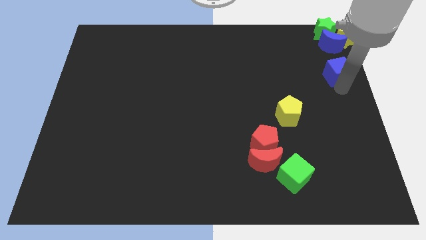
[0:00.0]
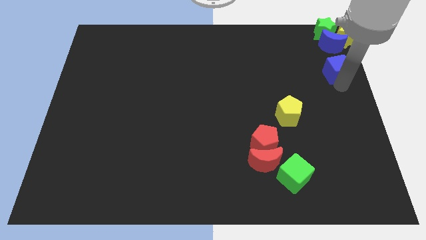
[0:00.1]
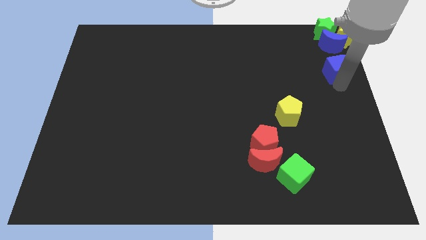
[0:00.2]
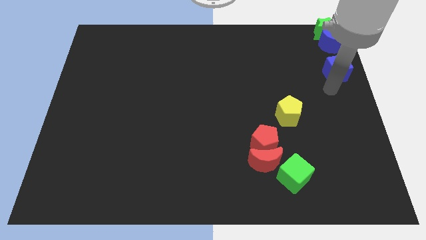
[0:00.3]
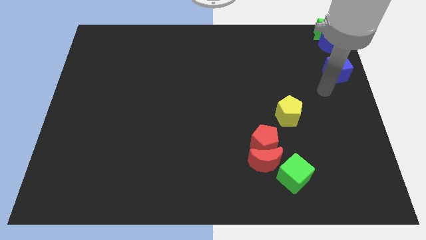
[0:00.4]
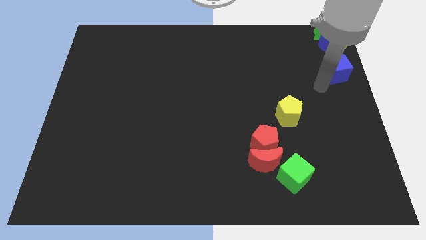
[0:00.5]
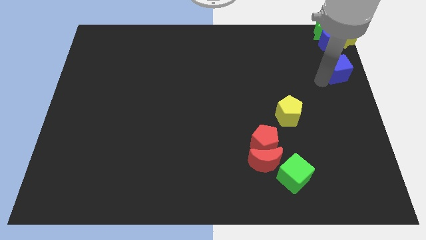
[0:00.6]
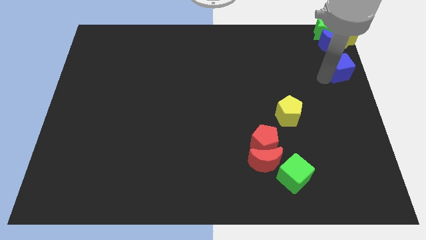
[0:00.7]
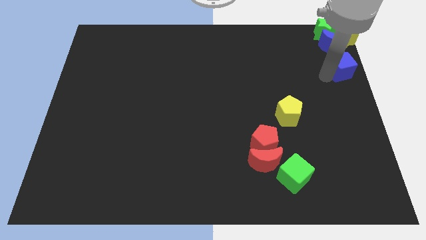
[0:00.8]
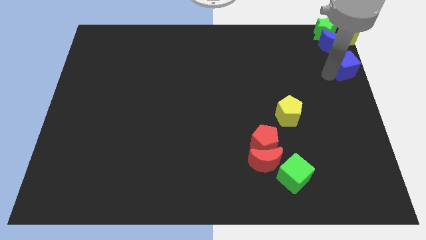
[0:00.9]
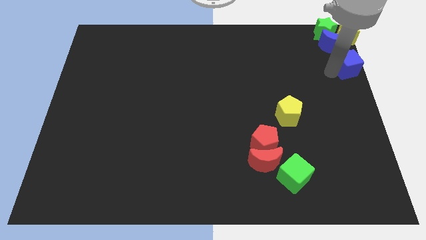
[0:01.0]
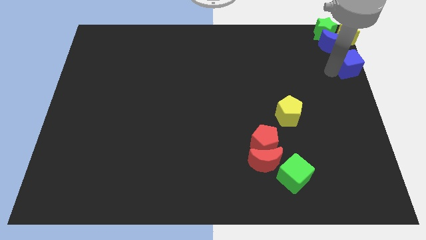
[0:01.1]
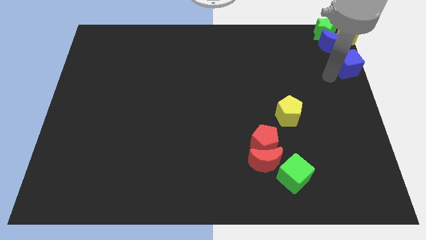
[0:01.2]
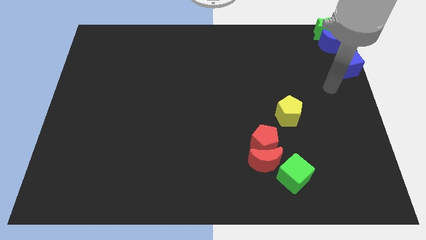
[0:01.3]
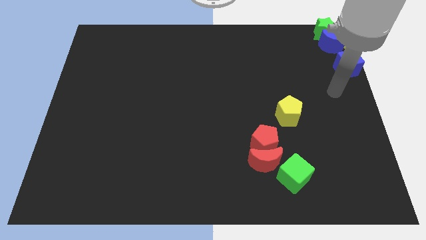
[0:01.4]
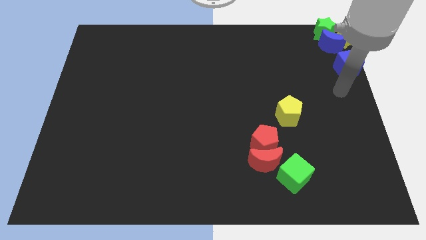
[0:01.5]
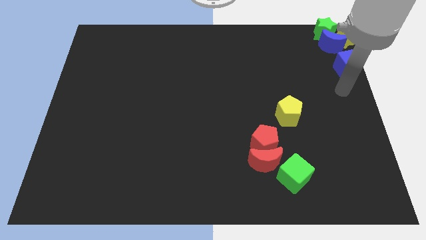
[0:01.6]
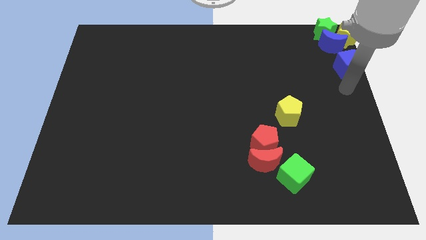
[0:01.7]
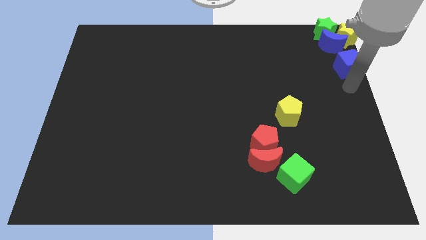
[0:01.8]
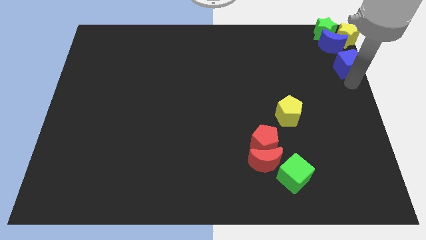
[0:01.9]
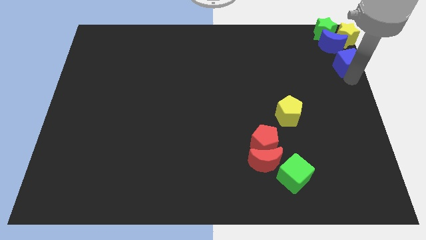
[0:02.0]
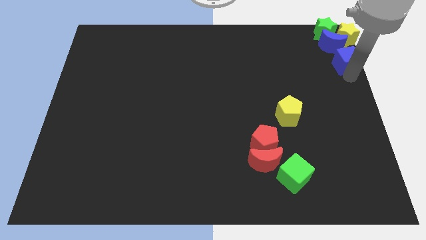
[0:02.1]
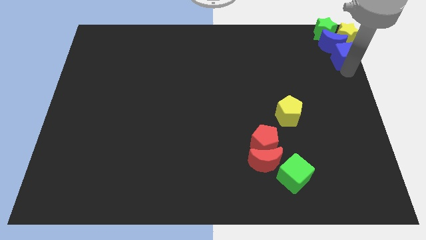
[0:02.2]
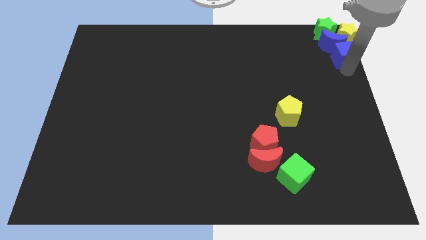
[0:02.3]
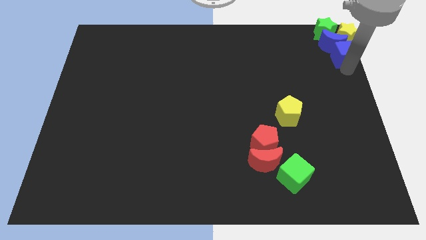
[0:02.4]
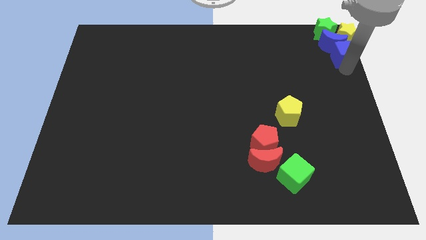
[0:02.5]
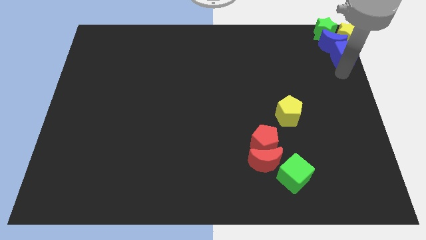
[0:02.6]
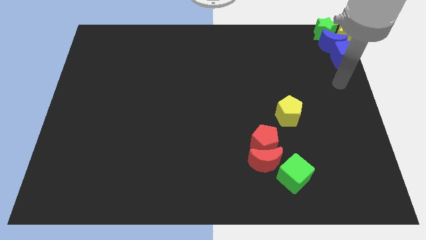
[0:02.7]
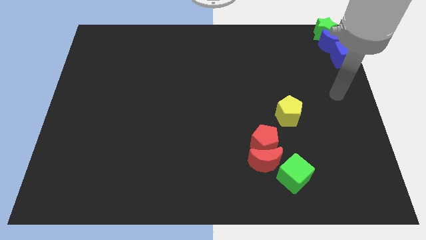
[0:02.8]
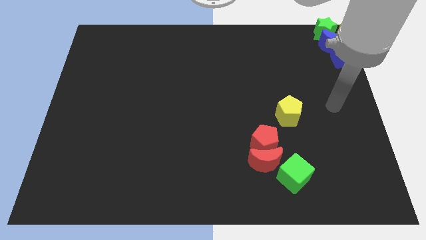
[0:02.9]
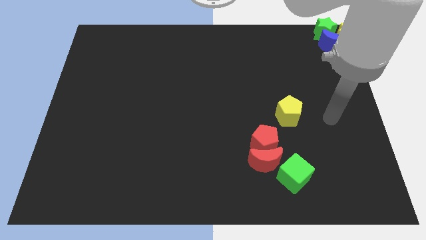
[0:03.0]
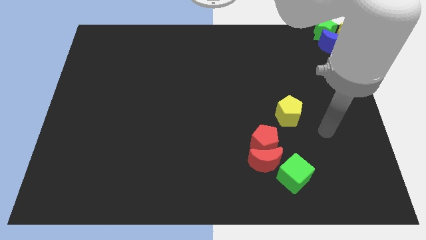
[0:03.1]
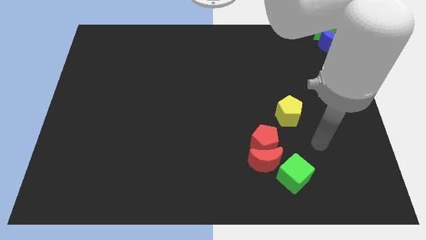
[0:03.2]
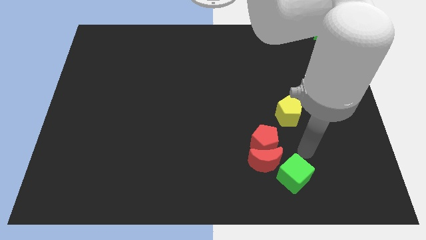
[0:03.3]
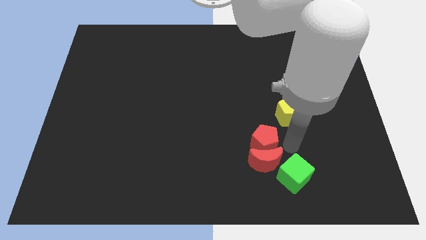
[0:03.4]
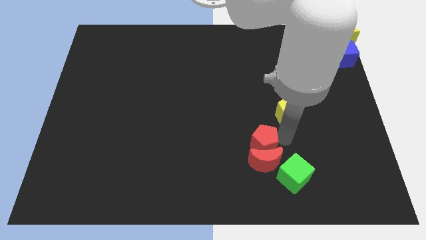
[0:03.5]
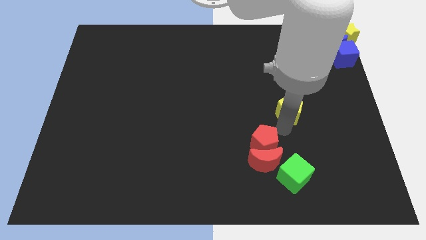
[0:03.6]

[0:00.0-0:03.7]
place the arm down to the yellow pentagon

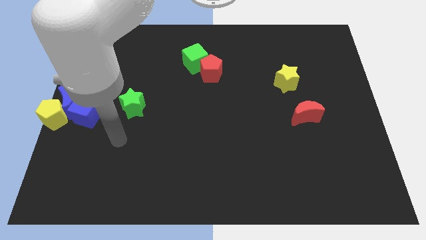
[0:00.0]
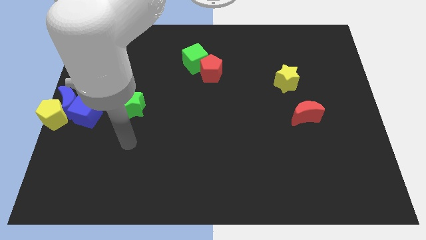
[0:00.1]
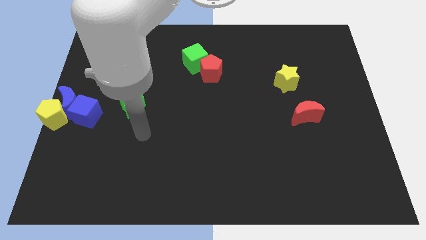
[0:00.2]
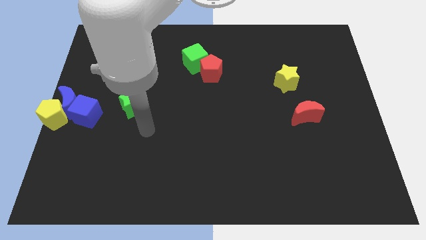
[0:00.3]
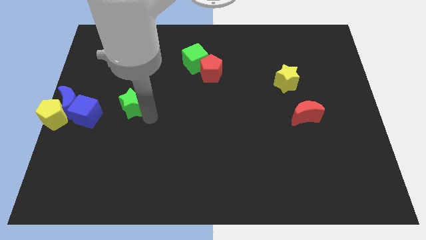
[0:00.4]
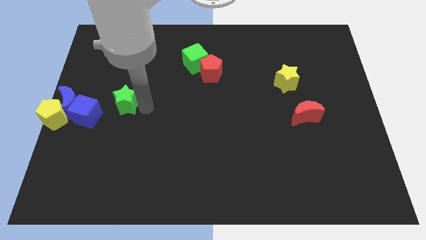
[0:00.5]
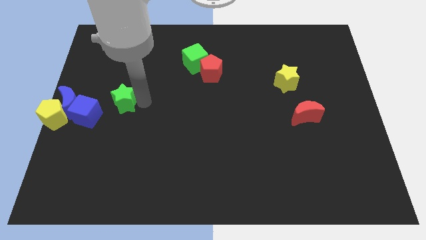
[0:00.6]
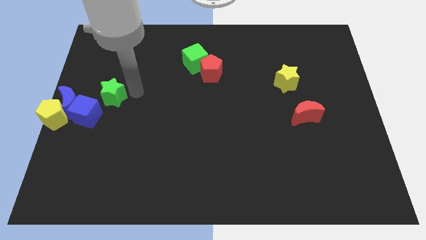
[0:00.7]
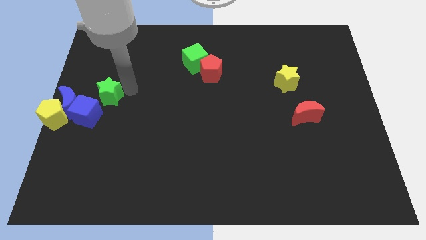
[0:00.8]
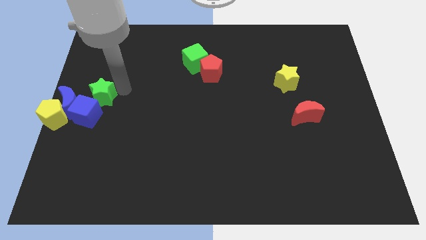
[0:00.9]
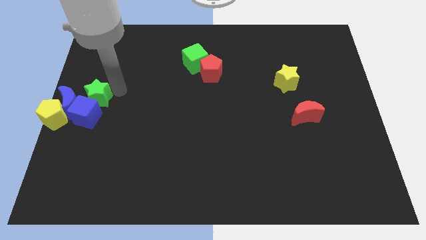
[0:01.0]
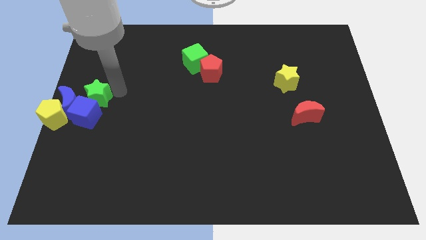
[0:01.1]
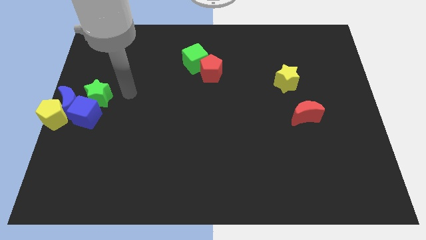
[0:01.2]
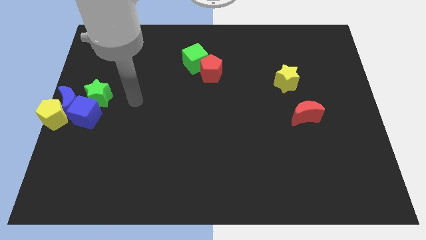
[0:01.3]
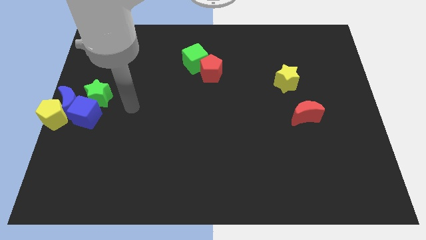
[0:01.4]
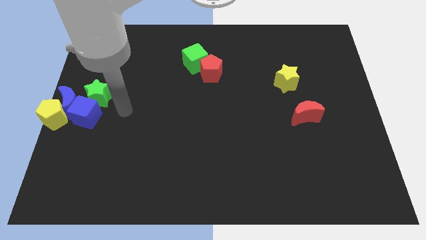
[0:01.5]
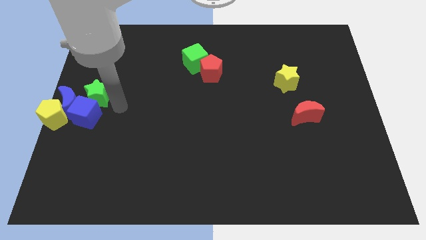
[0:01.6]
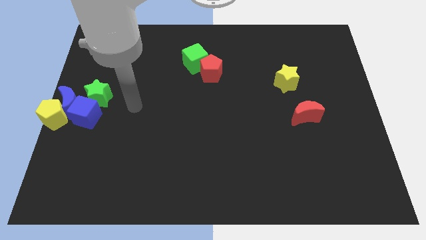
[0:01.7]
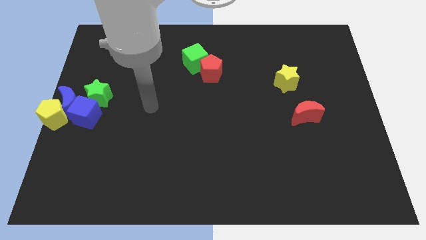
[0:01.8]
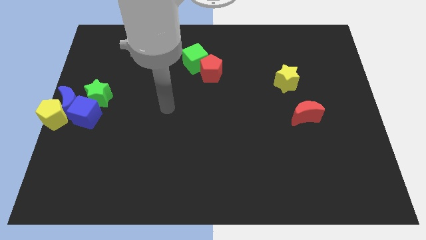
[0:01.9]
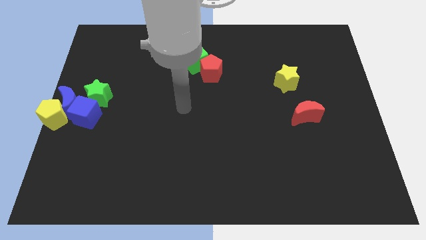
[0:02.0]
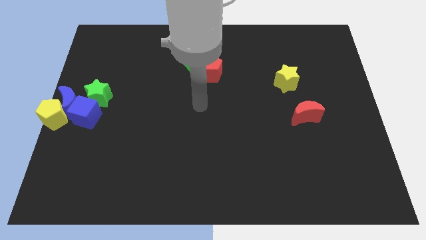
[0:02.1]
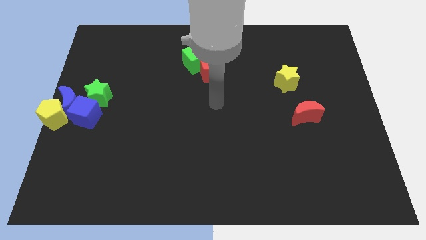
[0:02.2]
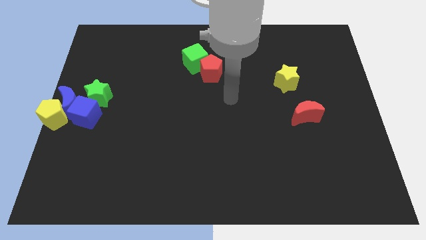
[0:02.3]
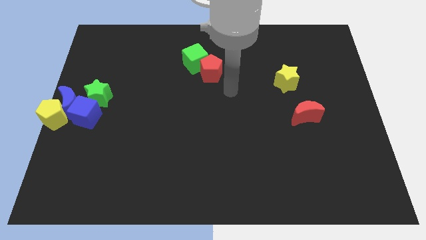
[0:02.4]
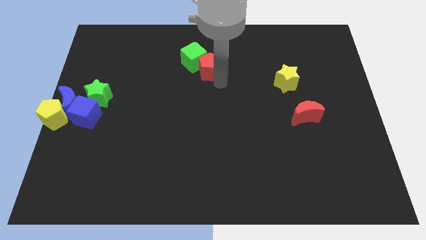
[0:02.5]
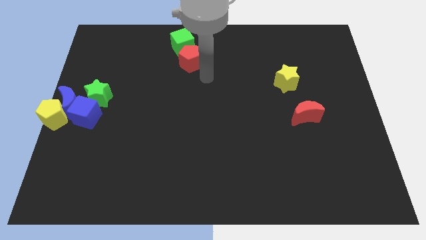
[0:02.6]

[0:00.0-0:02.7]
push the green star to the top of the blue cube

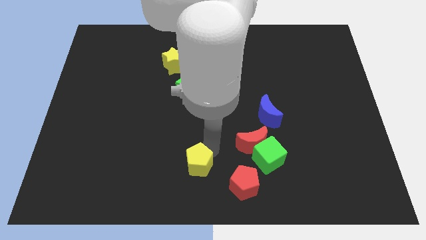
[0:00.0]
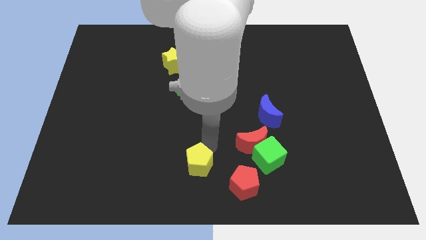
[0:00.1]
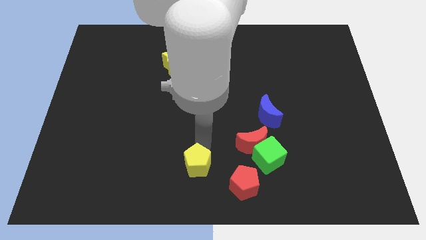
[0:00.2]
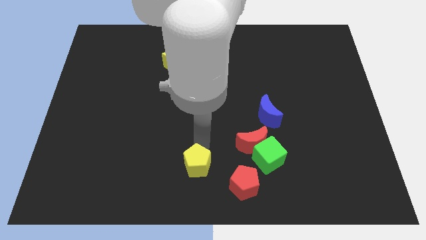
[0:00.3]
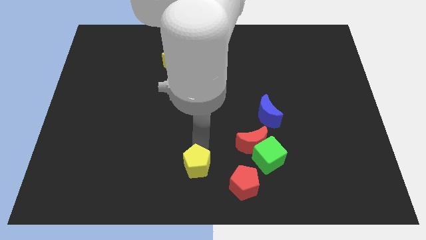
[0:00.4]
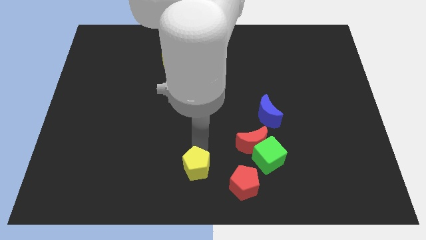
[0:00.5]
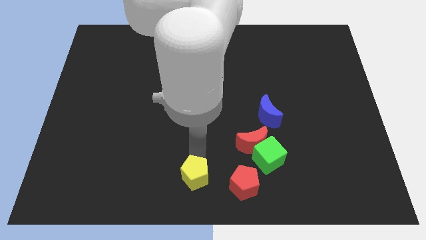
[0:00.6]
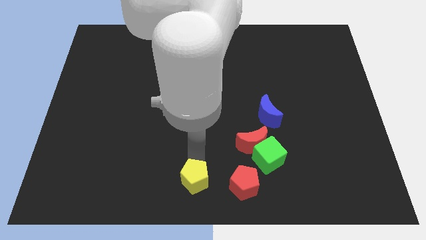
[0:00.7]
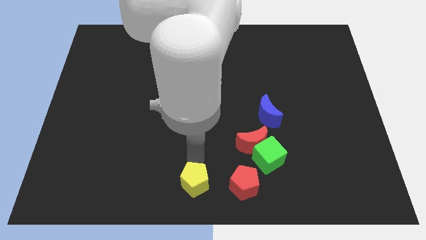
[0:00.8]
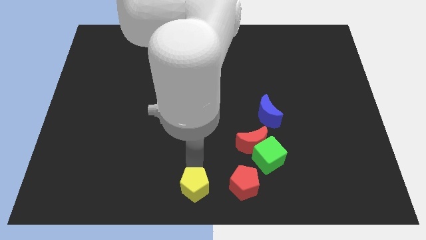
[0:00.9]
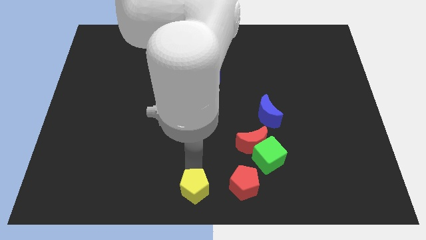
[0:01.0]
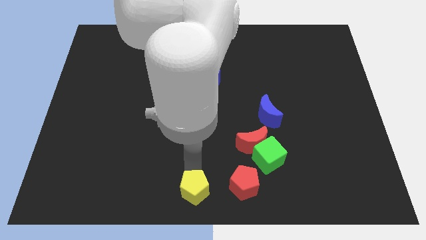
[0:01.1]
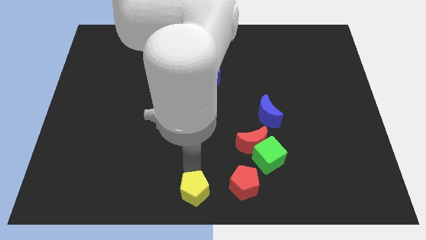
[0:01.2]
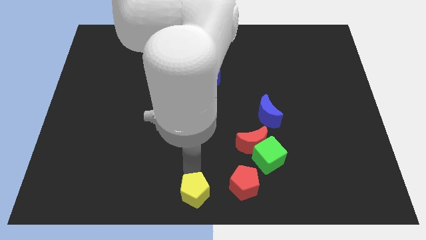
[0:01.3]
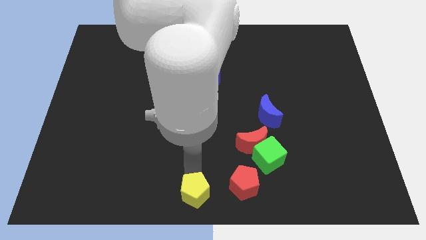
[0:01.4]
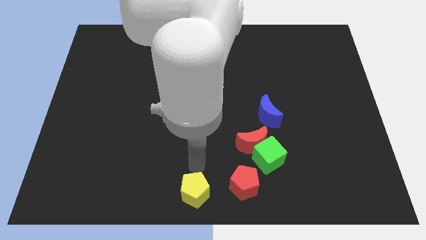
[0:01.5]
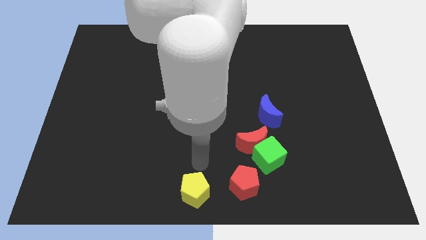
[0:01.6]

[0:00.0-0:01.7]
move the yellow pentagon to the bottom center of the board

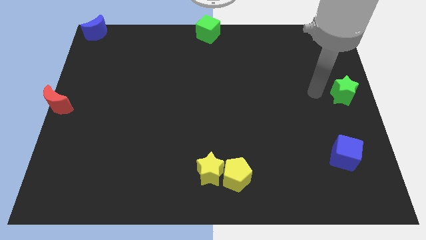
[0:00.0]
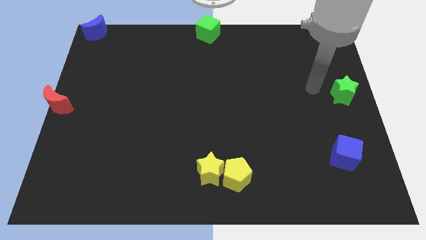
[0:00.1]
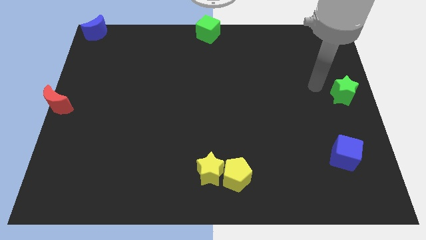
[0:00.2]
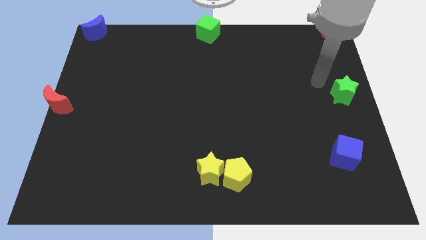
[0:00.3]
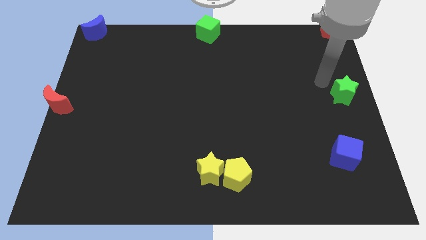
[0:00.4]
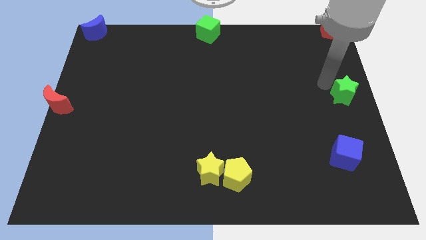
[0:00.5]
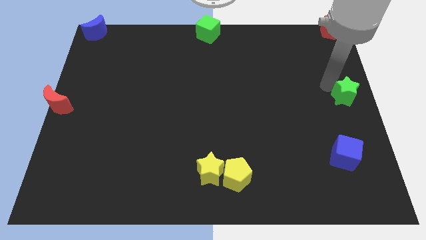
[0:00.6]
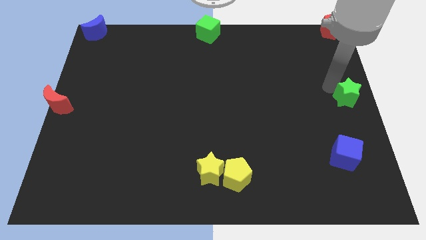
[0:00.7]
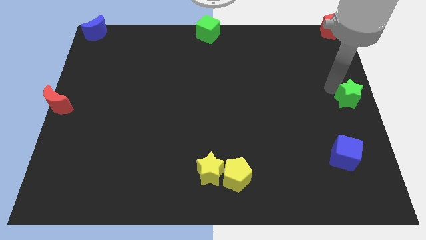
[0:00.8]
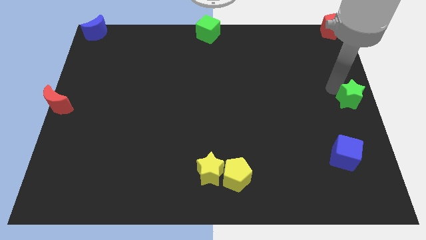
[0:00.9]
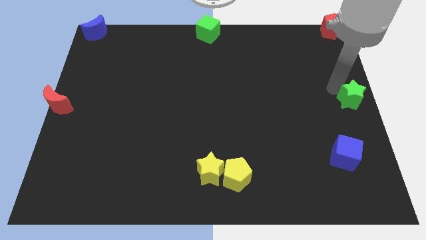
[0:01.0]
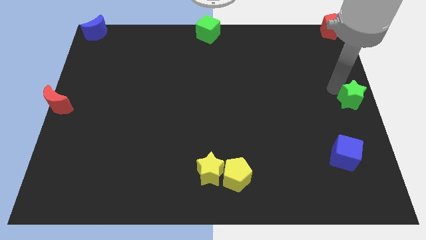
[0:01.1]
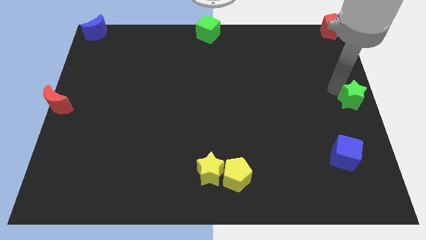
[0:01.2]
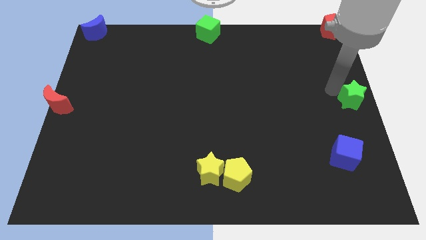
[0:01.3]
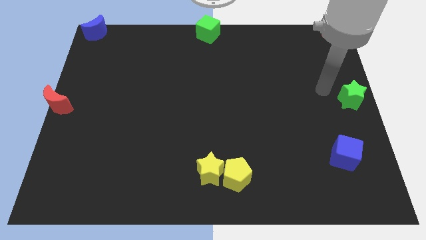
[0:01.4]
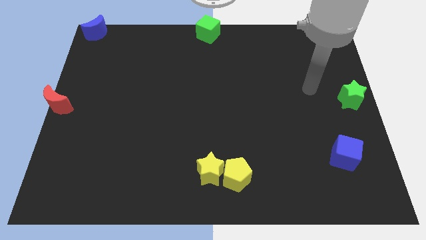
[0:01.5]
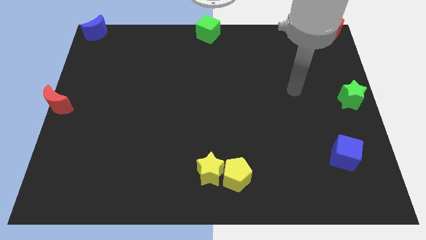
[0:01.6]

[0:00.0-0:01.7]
move the green star to the right middle
